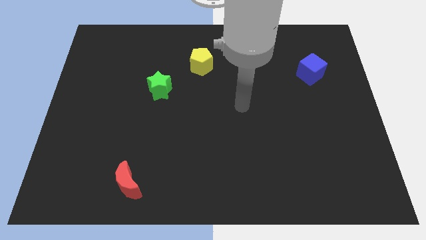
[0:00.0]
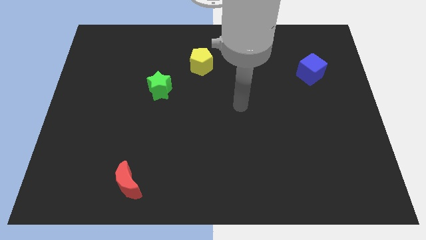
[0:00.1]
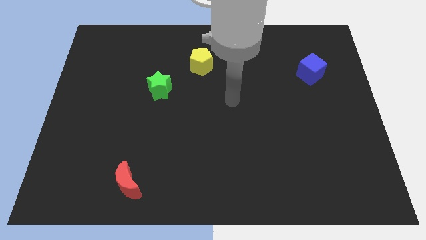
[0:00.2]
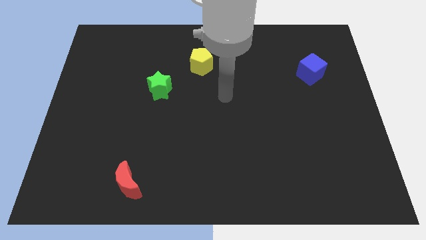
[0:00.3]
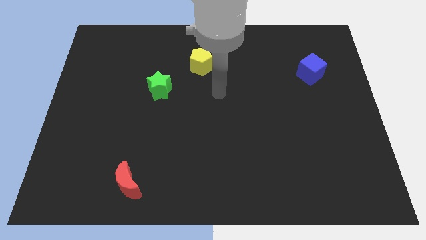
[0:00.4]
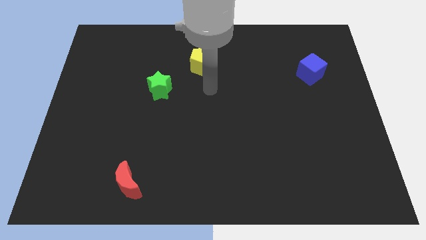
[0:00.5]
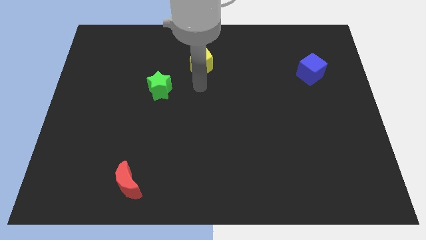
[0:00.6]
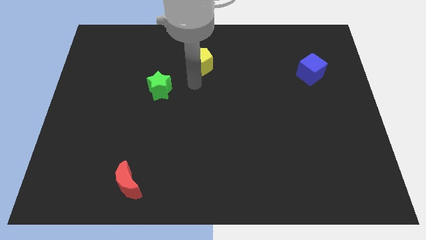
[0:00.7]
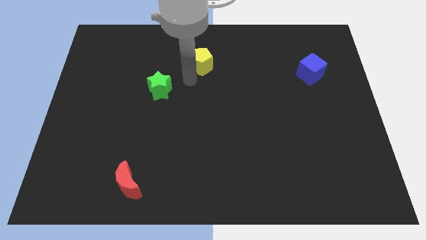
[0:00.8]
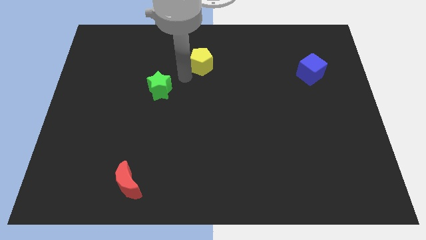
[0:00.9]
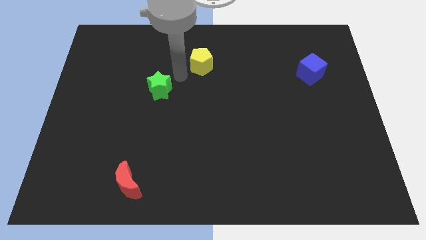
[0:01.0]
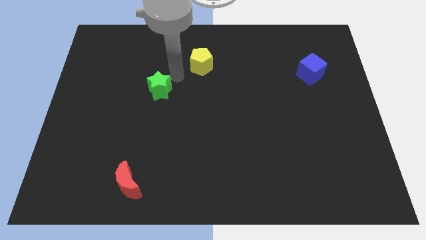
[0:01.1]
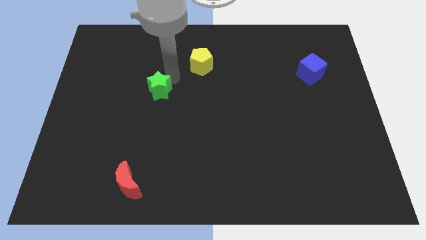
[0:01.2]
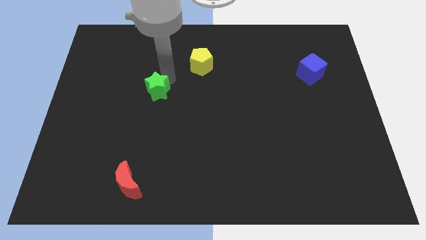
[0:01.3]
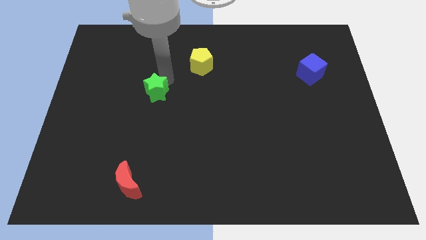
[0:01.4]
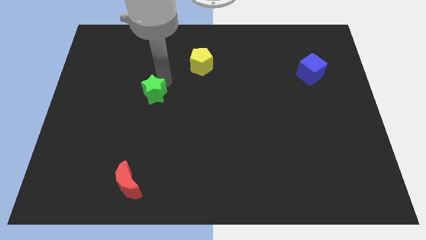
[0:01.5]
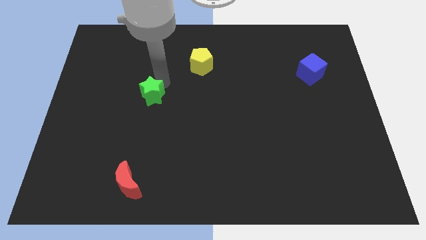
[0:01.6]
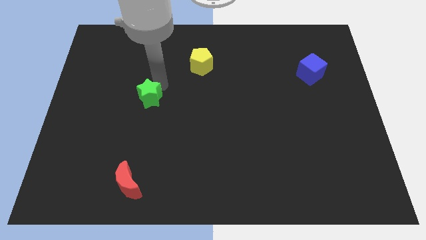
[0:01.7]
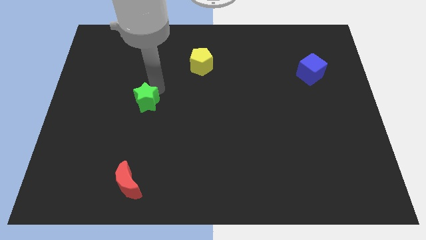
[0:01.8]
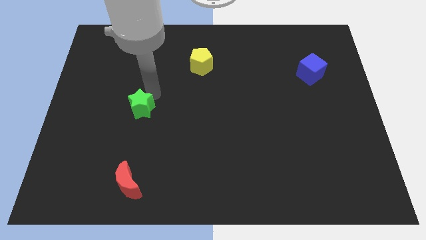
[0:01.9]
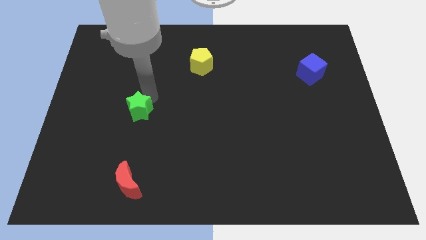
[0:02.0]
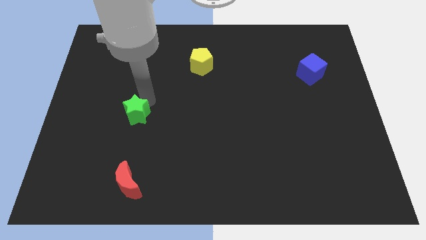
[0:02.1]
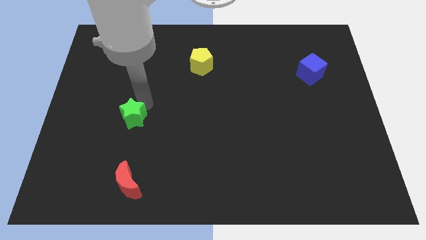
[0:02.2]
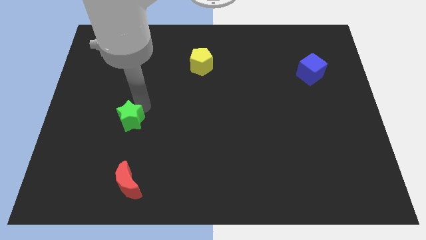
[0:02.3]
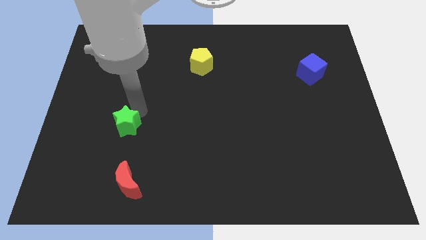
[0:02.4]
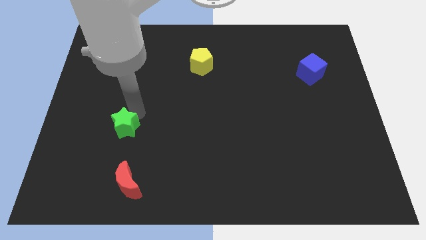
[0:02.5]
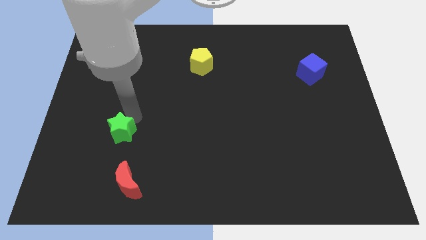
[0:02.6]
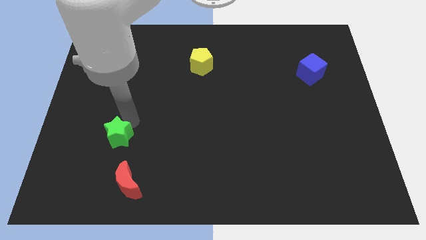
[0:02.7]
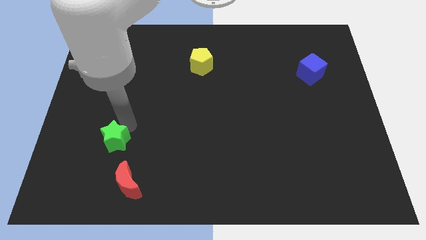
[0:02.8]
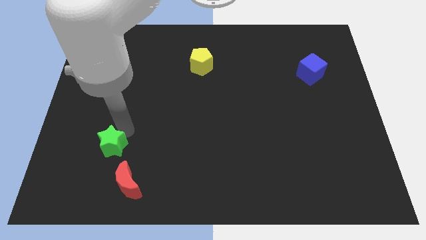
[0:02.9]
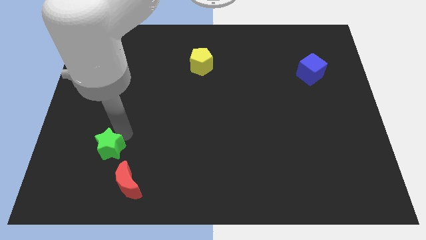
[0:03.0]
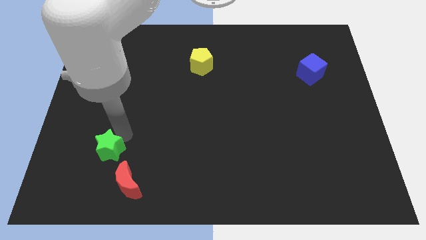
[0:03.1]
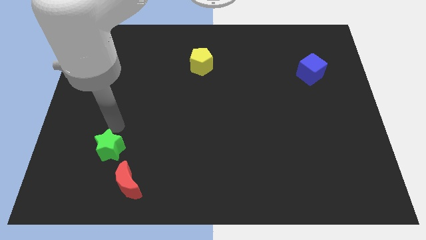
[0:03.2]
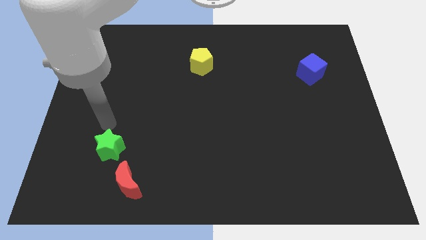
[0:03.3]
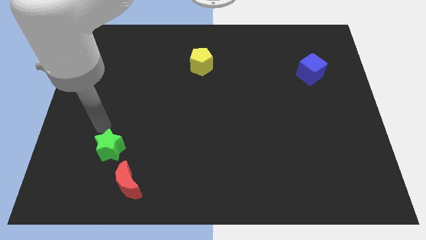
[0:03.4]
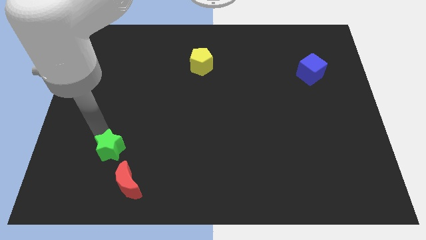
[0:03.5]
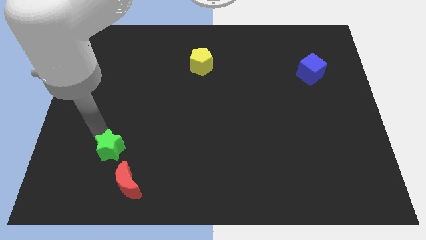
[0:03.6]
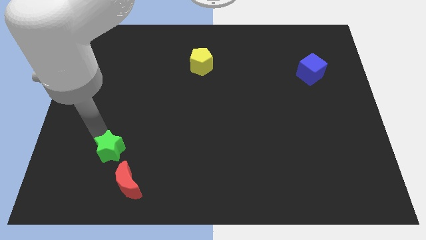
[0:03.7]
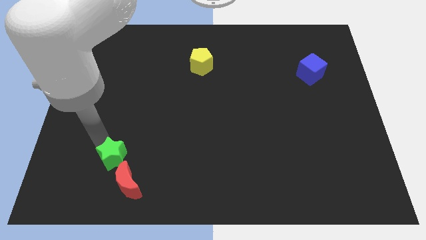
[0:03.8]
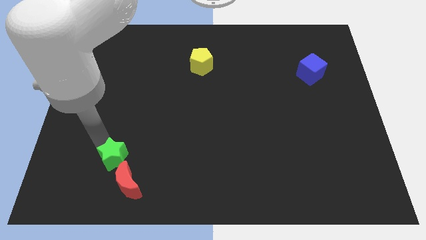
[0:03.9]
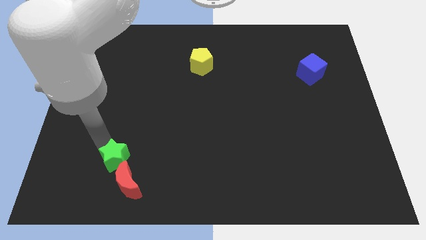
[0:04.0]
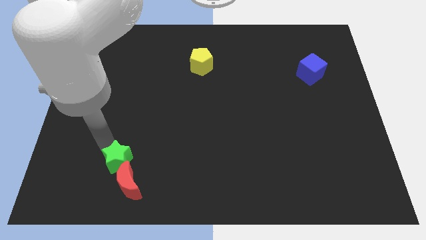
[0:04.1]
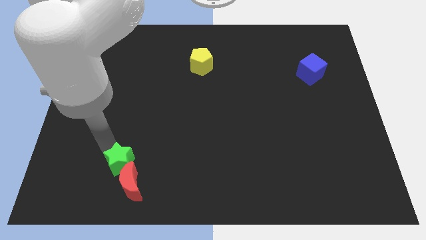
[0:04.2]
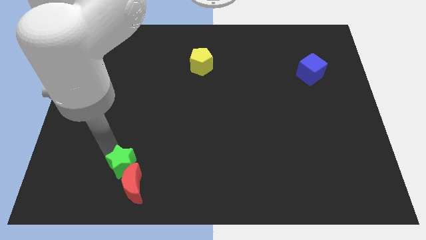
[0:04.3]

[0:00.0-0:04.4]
slide the green block next to the red moon

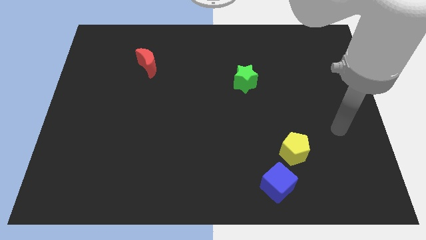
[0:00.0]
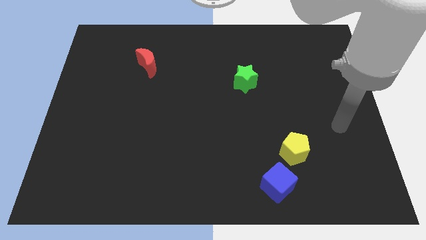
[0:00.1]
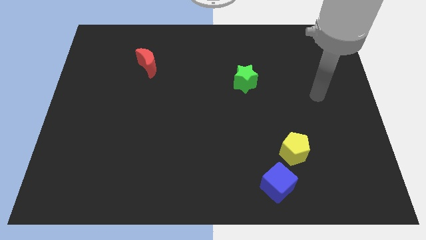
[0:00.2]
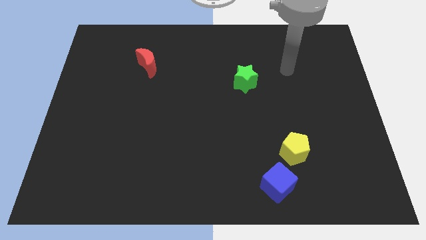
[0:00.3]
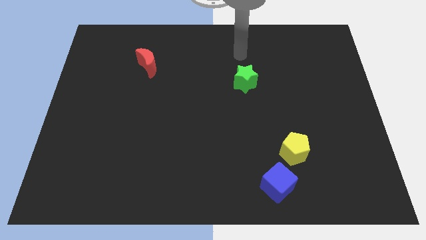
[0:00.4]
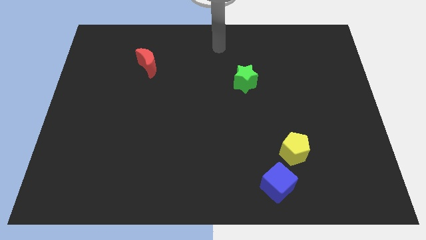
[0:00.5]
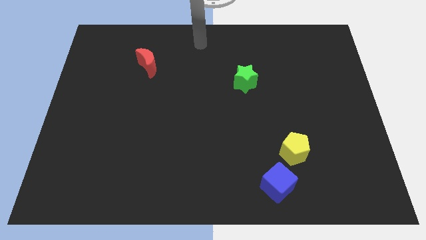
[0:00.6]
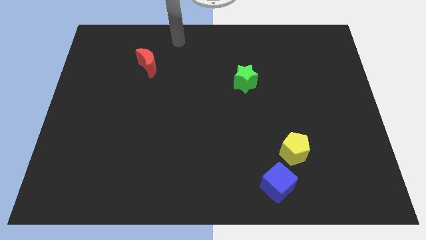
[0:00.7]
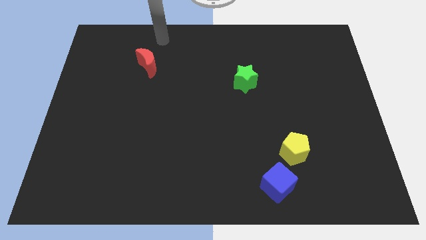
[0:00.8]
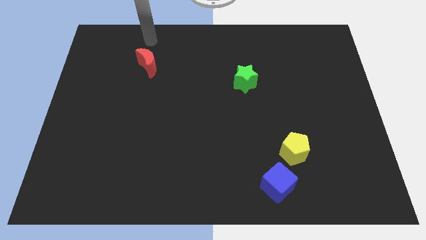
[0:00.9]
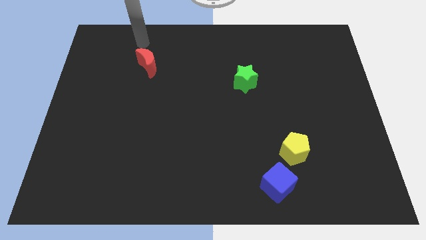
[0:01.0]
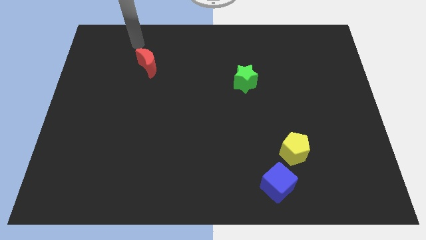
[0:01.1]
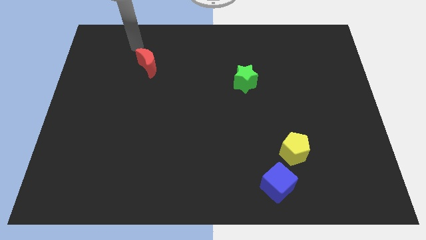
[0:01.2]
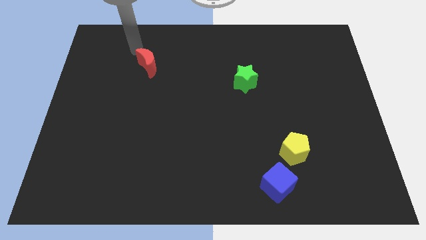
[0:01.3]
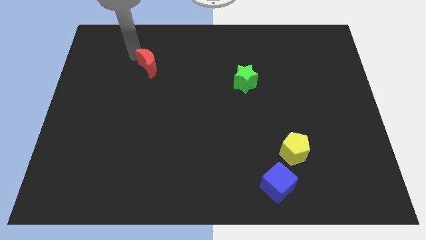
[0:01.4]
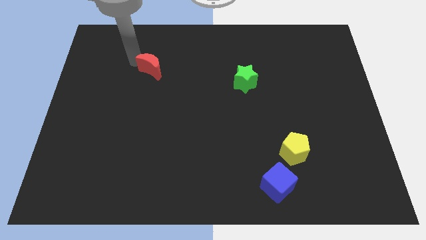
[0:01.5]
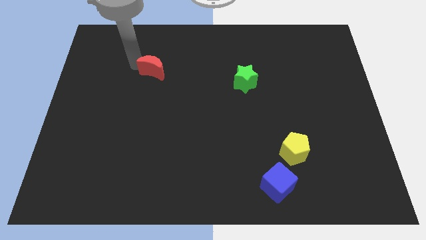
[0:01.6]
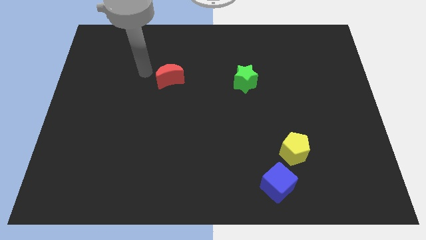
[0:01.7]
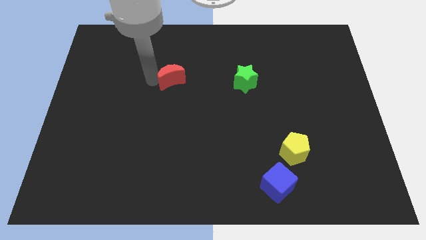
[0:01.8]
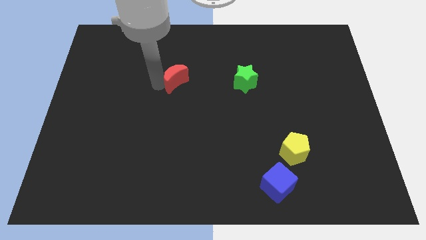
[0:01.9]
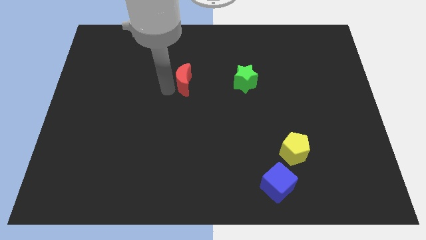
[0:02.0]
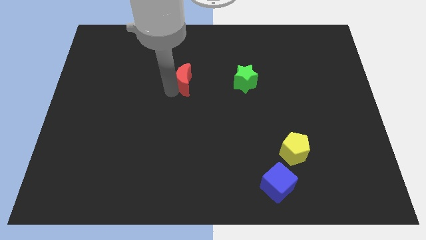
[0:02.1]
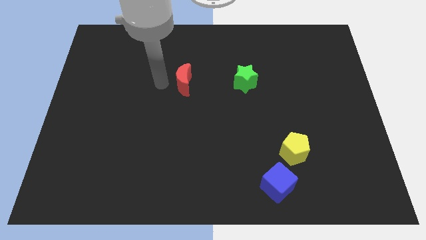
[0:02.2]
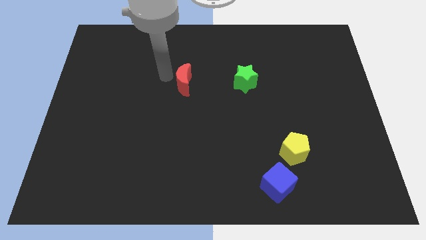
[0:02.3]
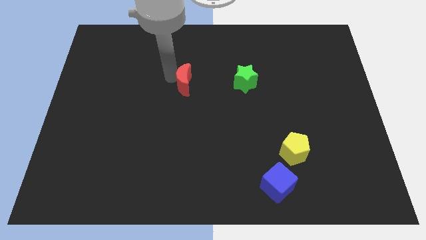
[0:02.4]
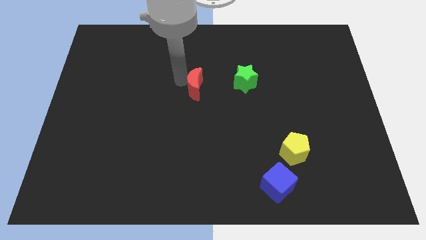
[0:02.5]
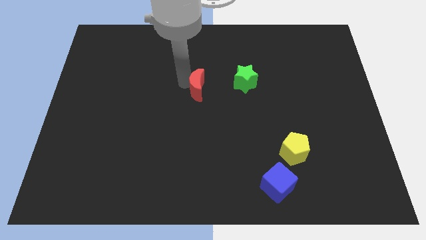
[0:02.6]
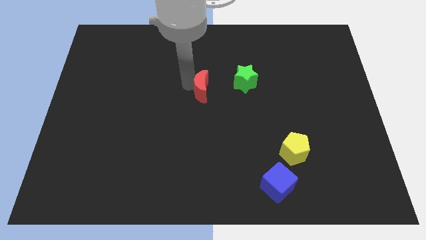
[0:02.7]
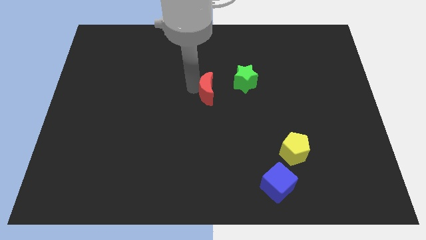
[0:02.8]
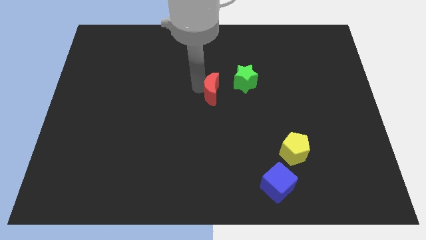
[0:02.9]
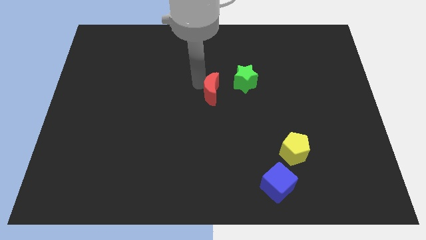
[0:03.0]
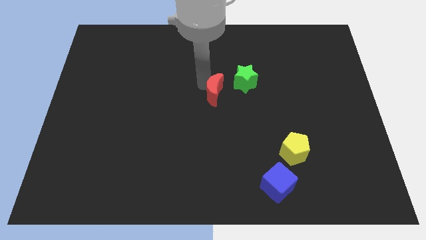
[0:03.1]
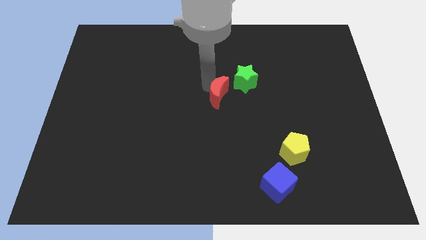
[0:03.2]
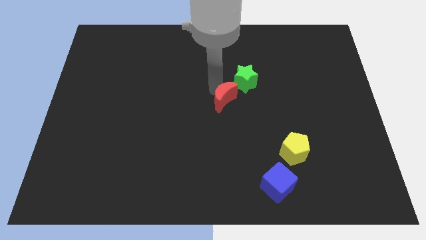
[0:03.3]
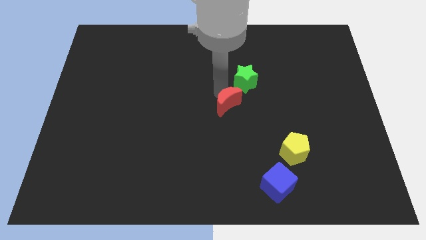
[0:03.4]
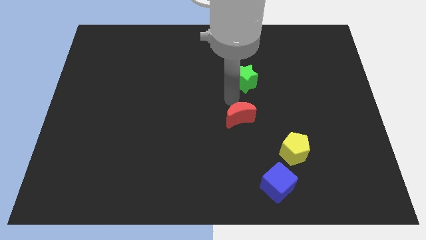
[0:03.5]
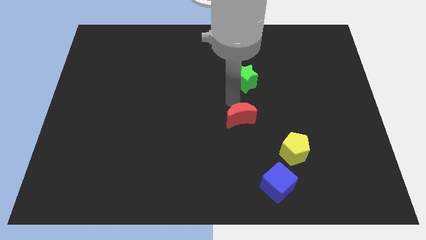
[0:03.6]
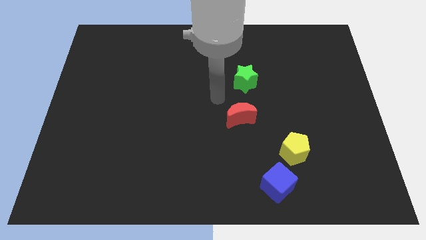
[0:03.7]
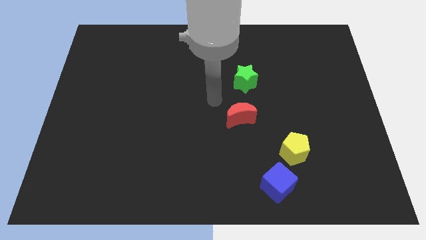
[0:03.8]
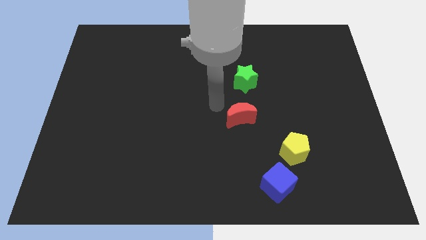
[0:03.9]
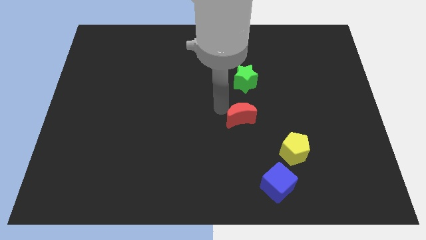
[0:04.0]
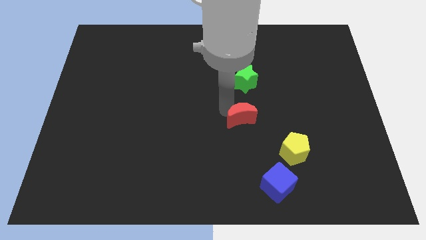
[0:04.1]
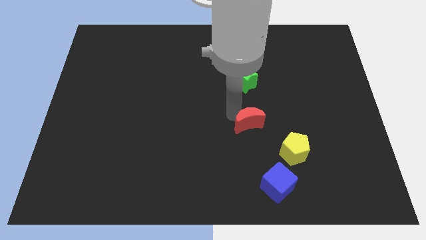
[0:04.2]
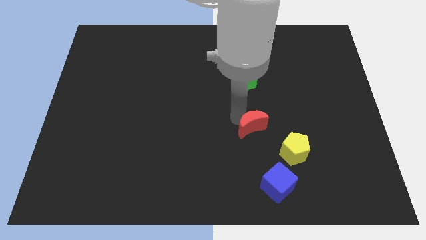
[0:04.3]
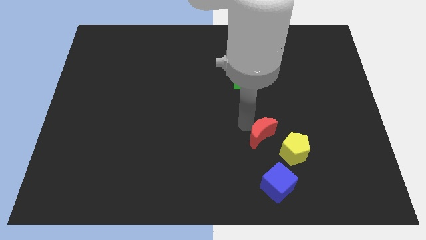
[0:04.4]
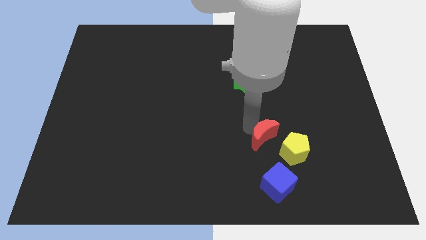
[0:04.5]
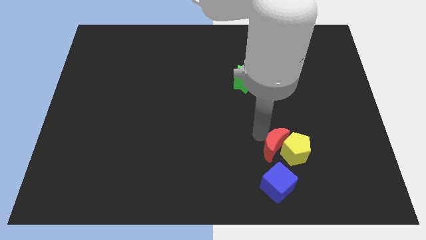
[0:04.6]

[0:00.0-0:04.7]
push the red block close to the yellow block
